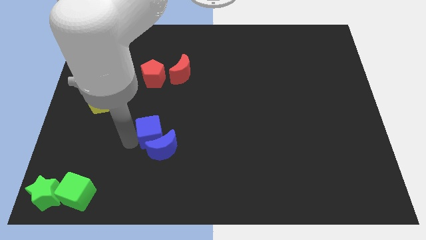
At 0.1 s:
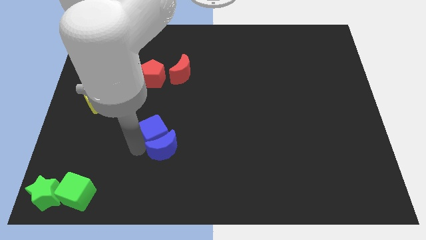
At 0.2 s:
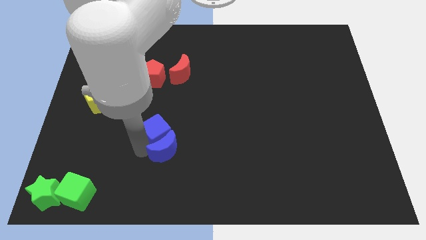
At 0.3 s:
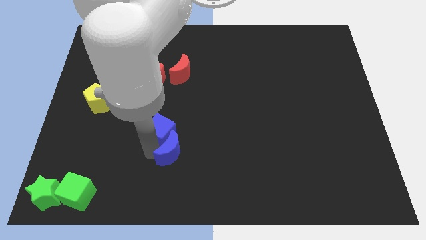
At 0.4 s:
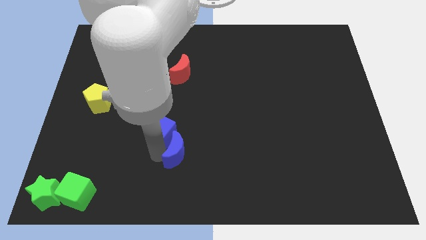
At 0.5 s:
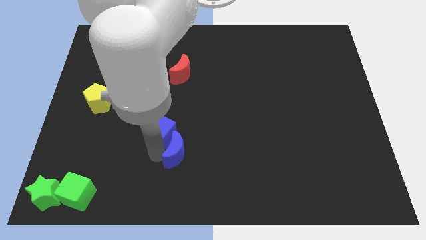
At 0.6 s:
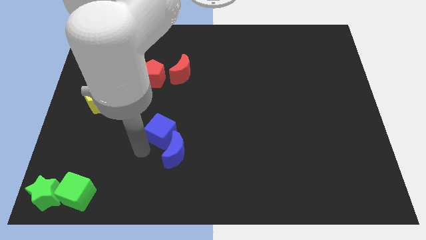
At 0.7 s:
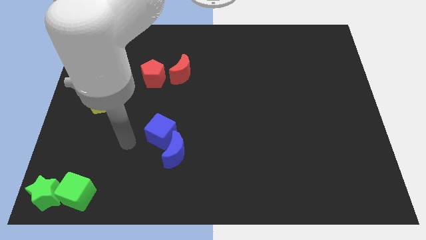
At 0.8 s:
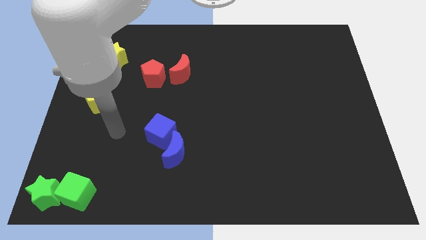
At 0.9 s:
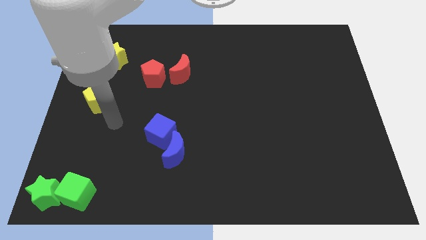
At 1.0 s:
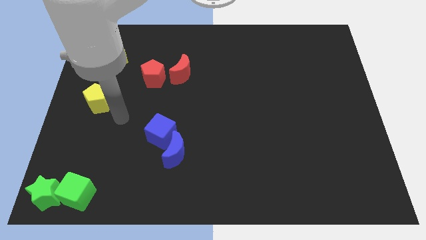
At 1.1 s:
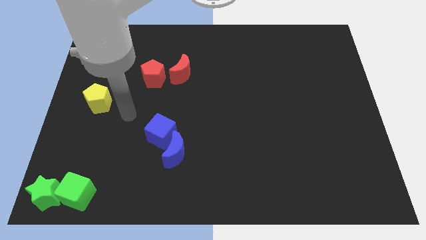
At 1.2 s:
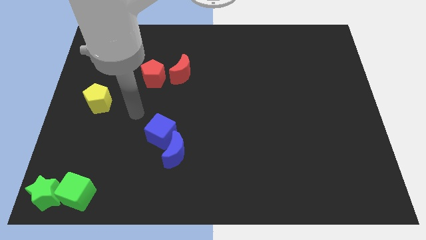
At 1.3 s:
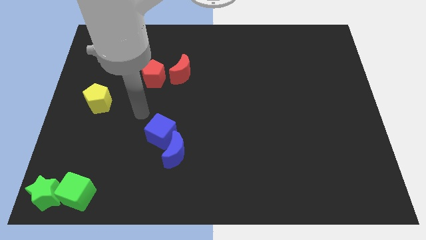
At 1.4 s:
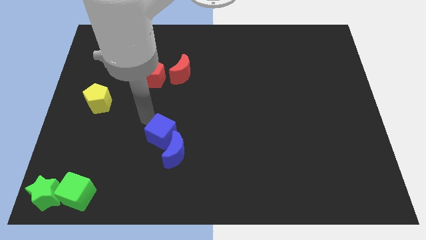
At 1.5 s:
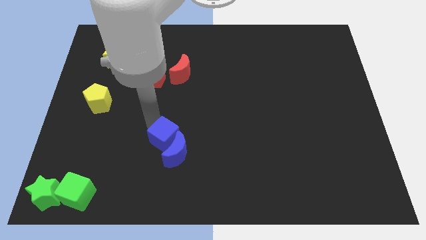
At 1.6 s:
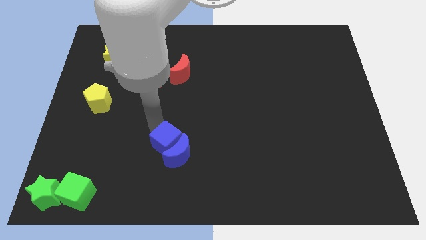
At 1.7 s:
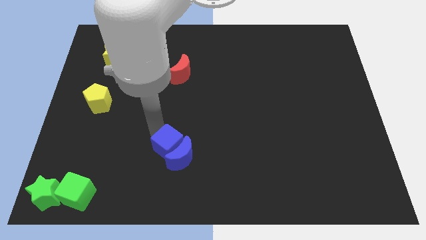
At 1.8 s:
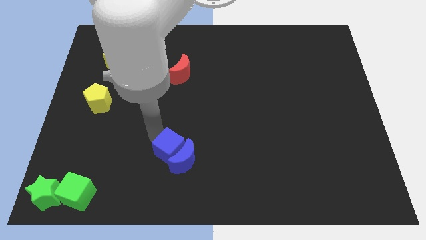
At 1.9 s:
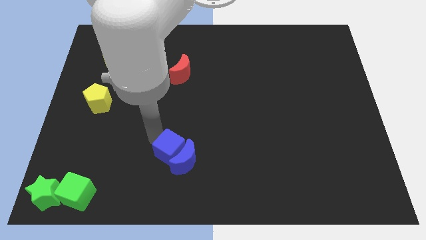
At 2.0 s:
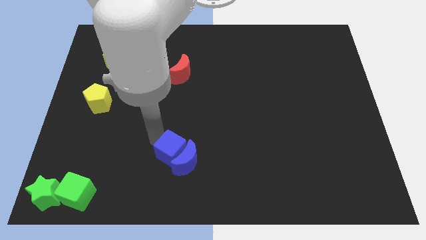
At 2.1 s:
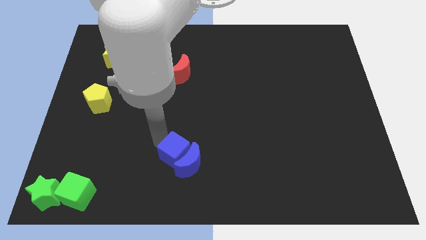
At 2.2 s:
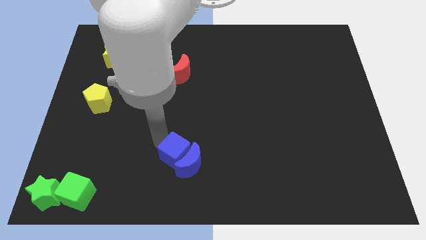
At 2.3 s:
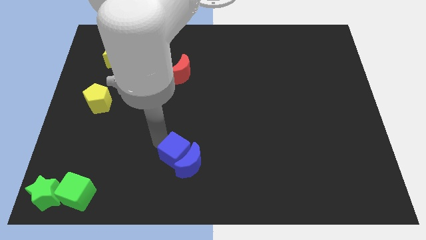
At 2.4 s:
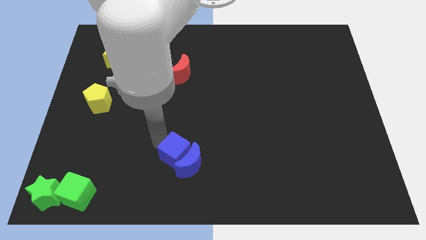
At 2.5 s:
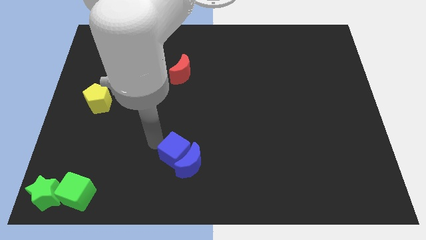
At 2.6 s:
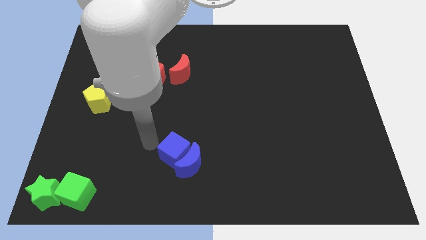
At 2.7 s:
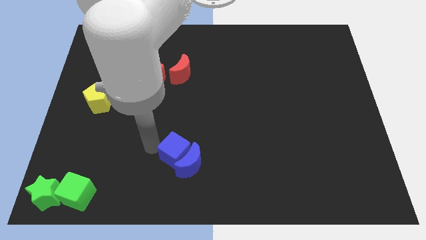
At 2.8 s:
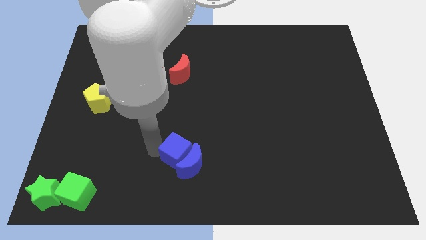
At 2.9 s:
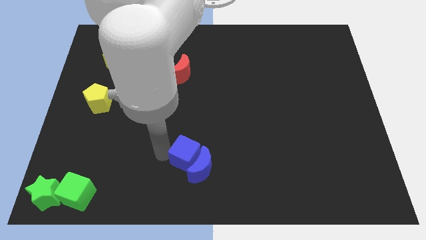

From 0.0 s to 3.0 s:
push blue cube below red crescent

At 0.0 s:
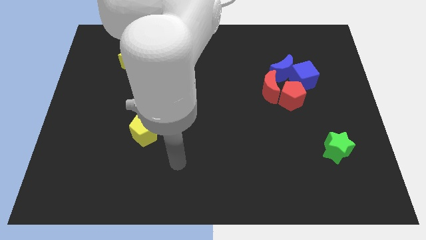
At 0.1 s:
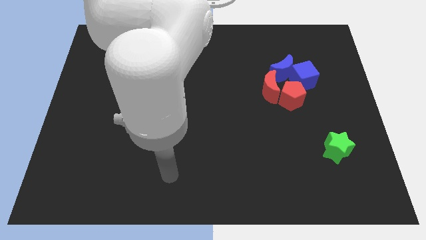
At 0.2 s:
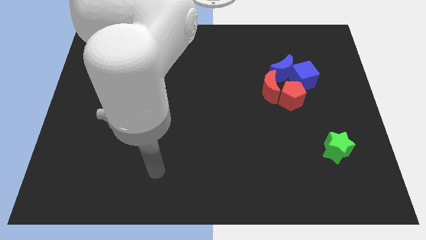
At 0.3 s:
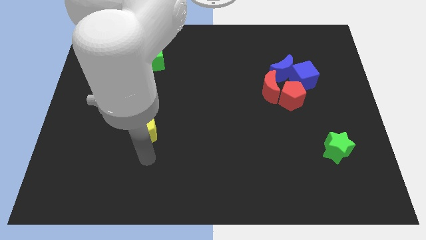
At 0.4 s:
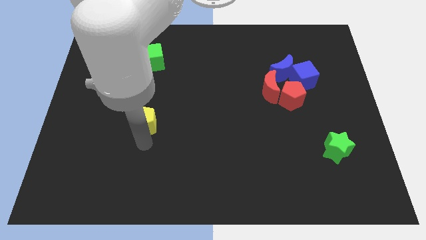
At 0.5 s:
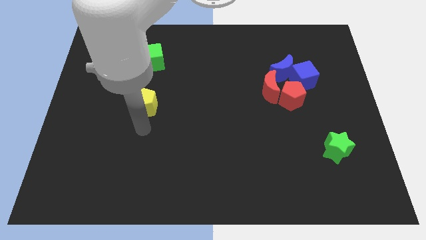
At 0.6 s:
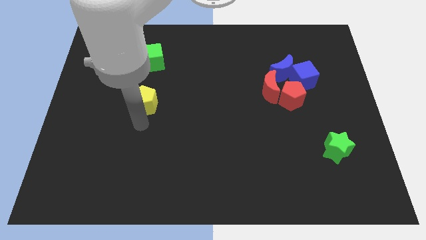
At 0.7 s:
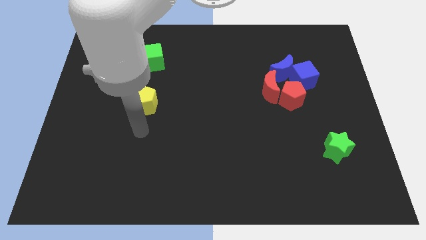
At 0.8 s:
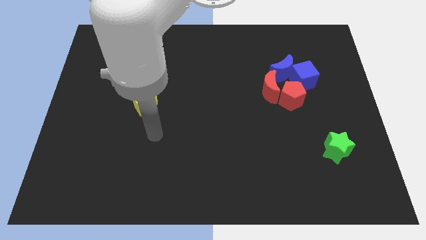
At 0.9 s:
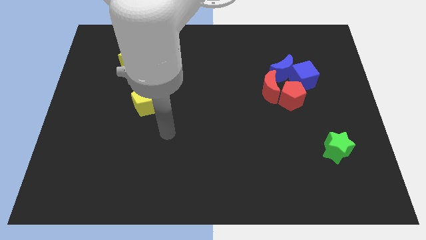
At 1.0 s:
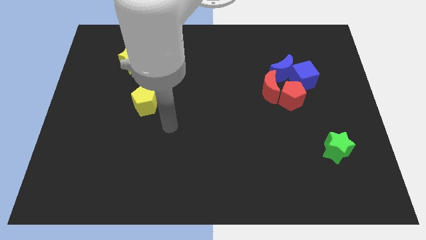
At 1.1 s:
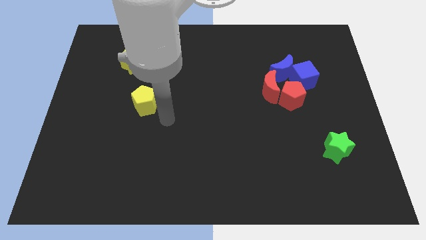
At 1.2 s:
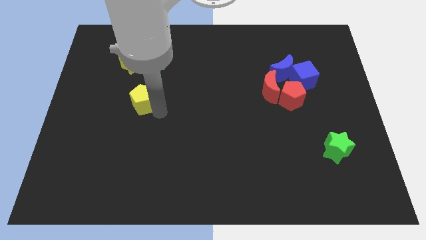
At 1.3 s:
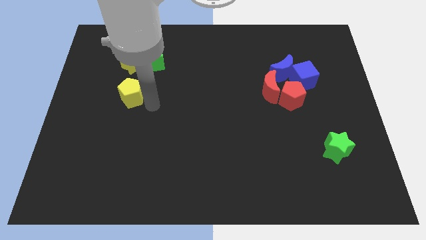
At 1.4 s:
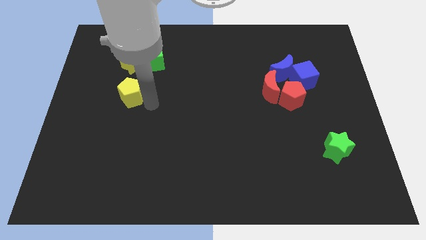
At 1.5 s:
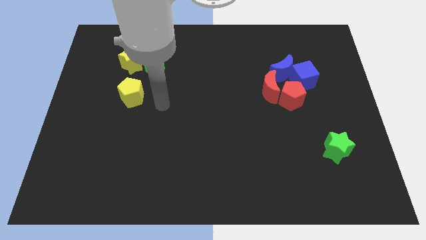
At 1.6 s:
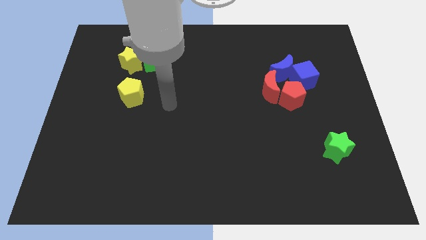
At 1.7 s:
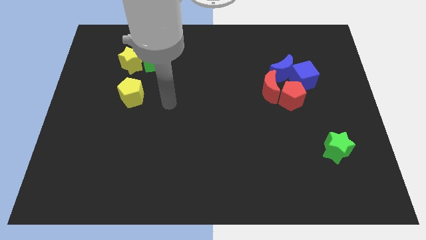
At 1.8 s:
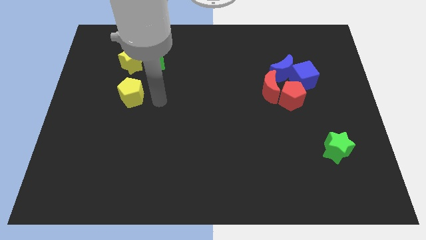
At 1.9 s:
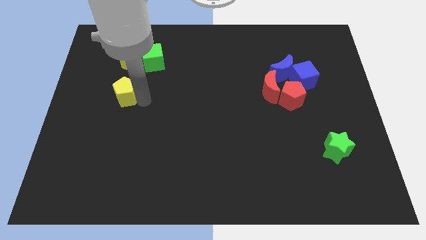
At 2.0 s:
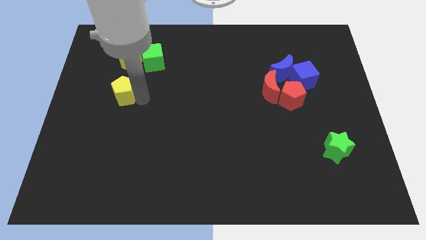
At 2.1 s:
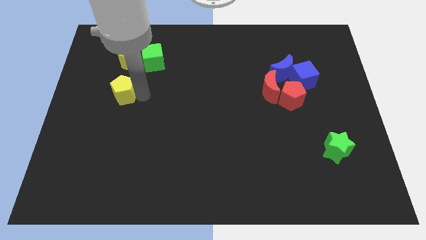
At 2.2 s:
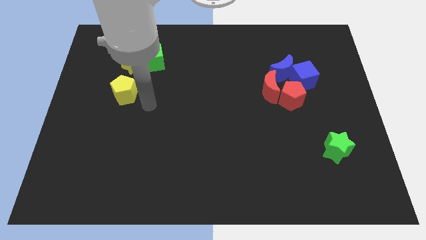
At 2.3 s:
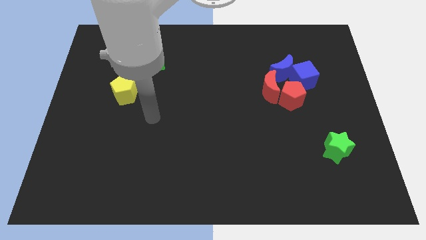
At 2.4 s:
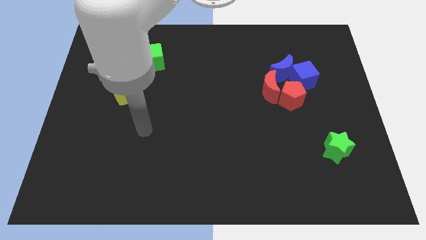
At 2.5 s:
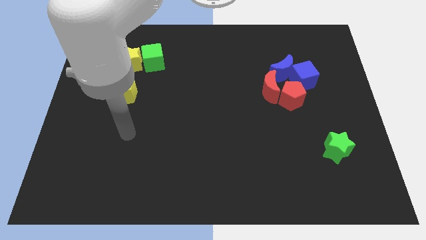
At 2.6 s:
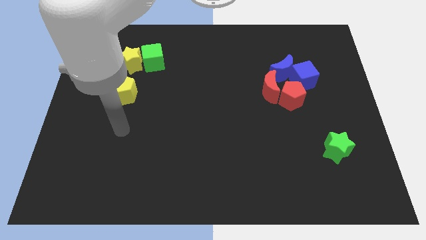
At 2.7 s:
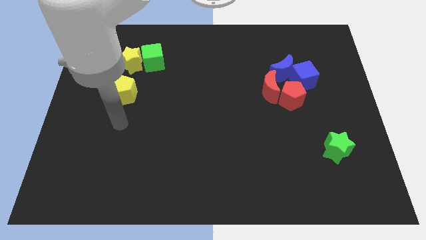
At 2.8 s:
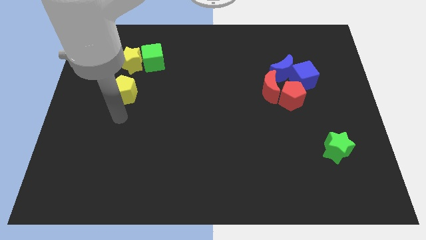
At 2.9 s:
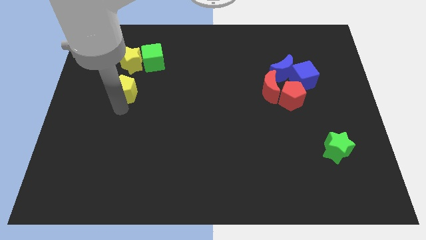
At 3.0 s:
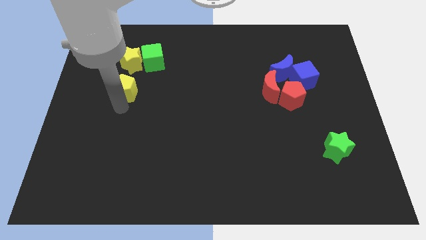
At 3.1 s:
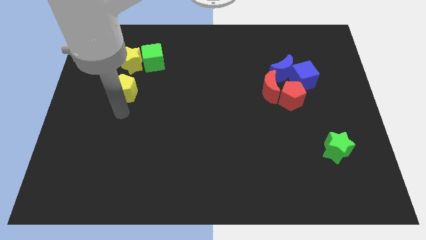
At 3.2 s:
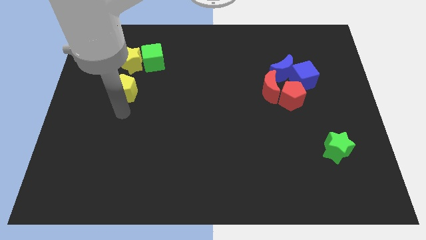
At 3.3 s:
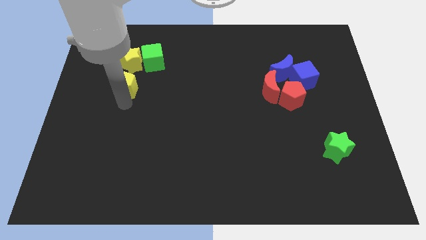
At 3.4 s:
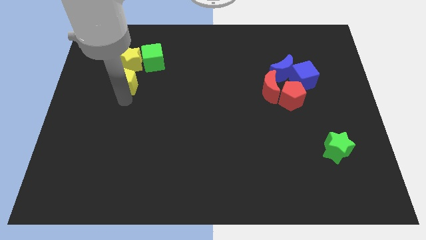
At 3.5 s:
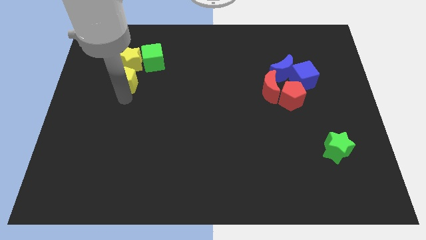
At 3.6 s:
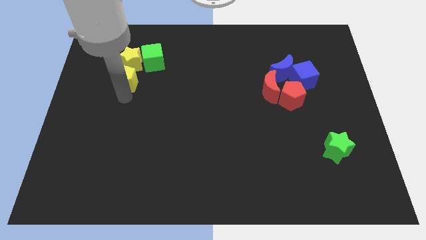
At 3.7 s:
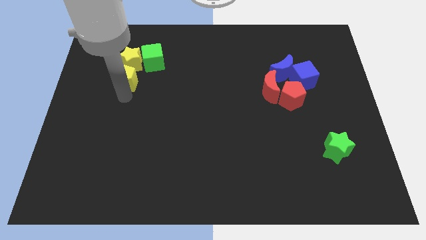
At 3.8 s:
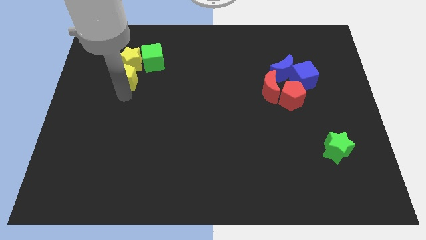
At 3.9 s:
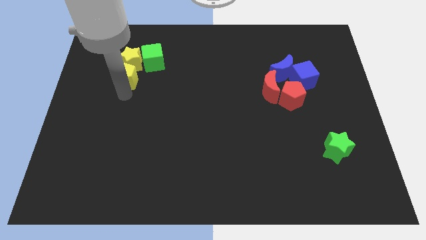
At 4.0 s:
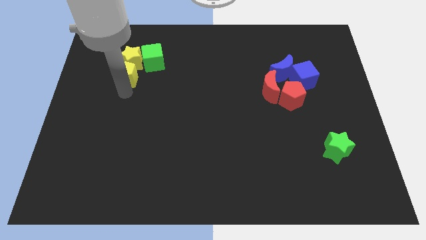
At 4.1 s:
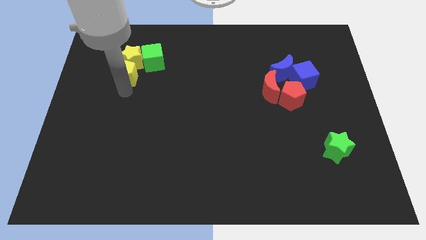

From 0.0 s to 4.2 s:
move the yellow pentagon into the bottom side of the yellow star

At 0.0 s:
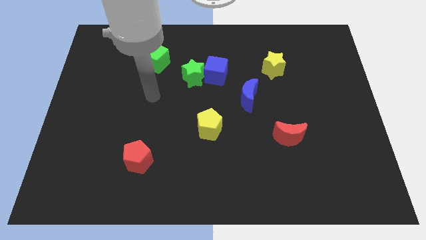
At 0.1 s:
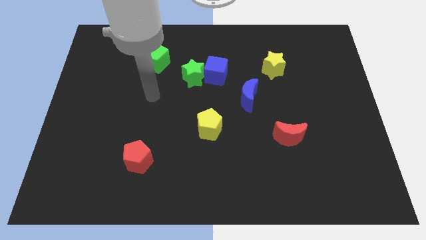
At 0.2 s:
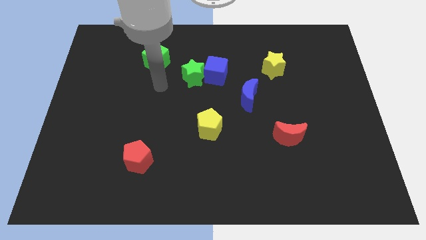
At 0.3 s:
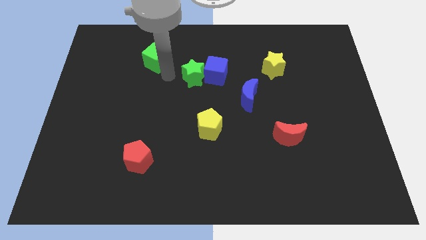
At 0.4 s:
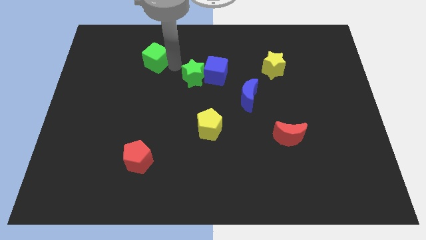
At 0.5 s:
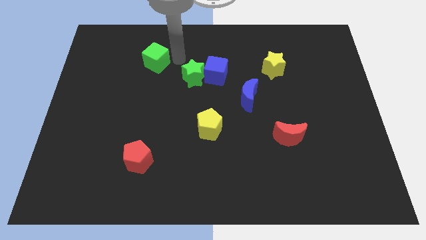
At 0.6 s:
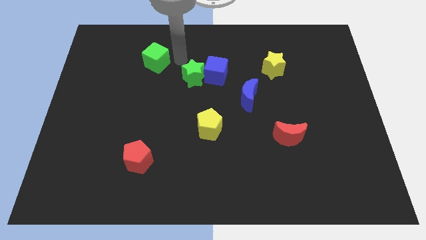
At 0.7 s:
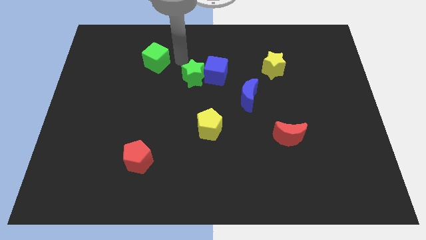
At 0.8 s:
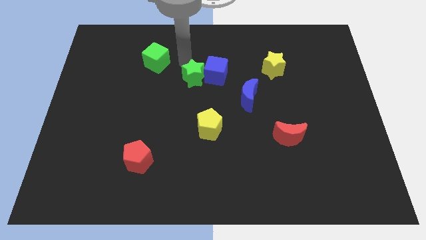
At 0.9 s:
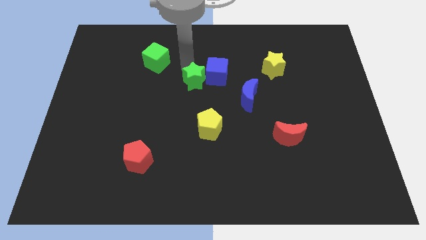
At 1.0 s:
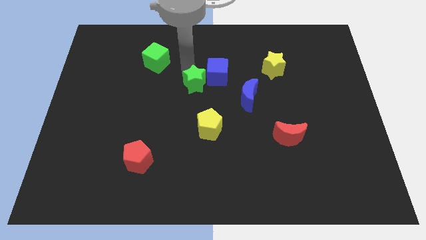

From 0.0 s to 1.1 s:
move your arm to the top side of green star

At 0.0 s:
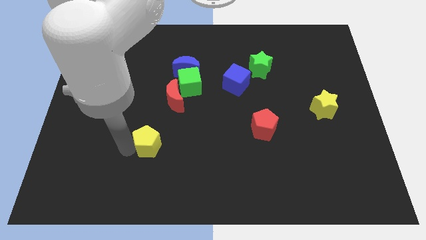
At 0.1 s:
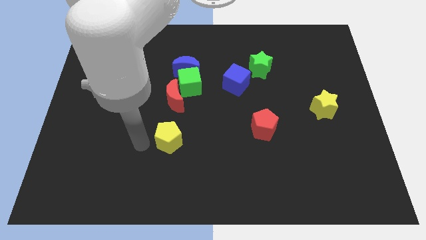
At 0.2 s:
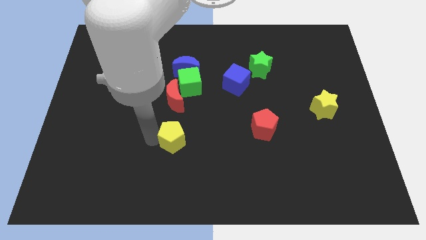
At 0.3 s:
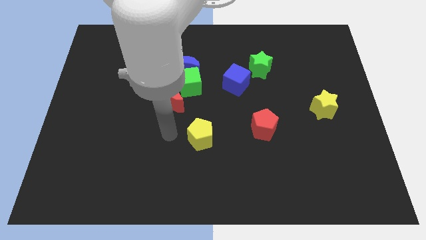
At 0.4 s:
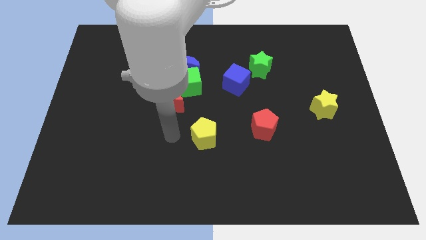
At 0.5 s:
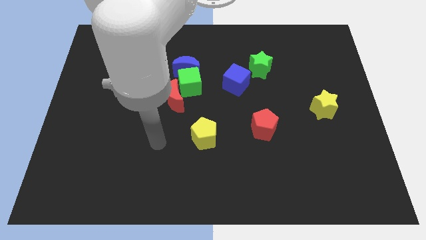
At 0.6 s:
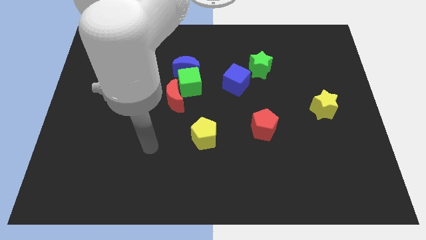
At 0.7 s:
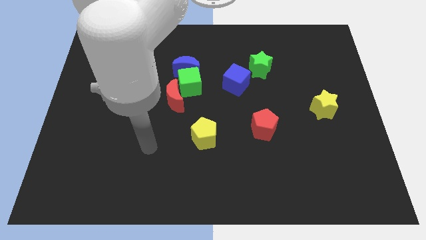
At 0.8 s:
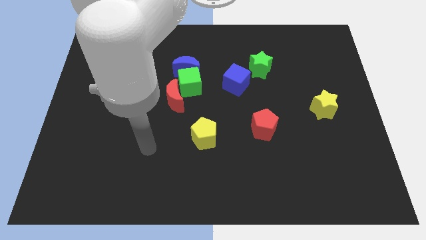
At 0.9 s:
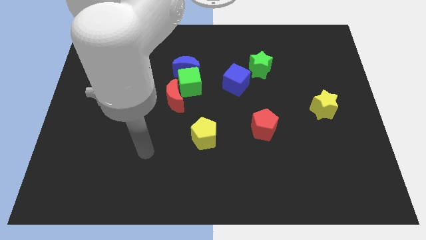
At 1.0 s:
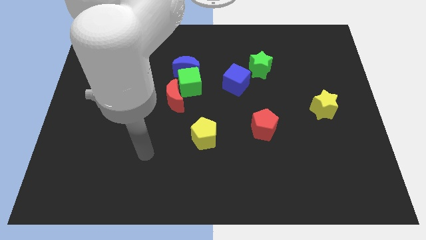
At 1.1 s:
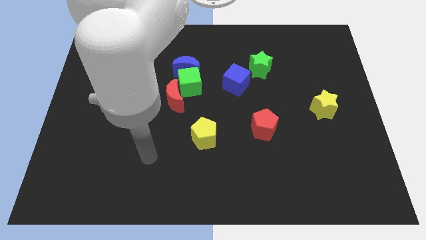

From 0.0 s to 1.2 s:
push the yellow pentagon to the center of the board
